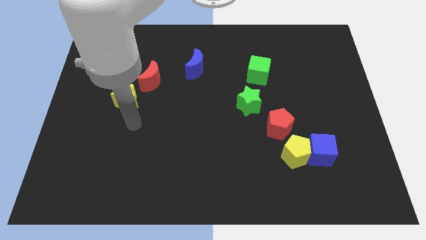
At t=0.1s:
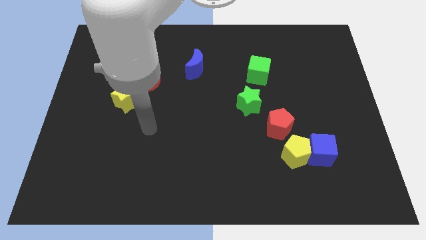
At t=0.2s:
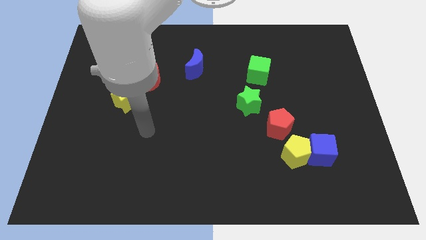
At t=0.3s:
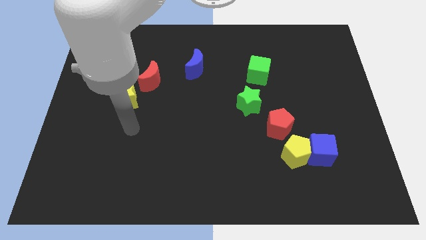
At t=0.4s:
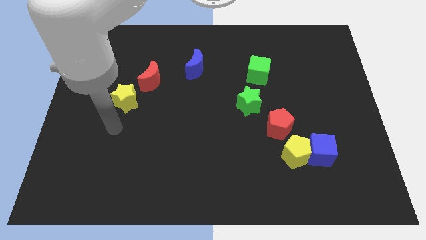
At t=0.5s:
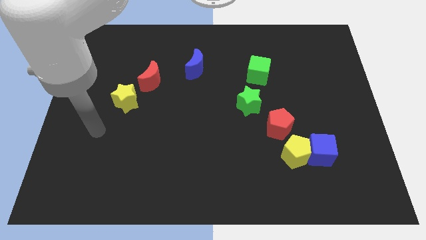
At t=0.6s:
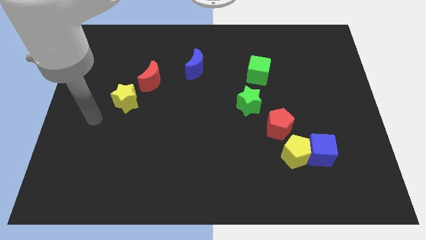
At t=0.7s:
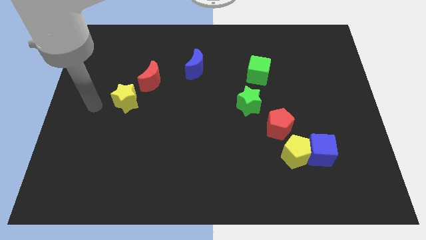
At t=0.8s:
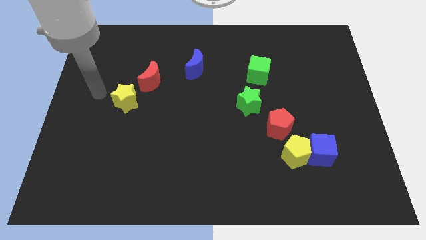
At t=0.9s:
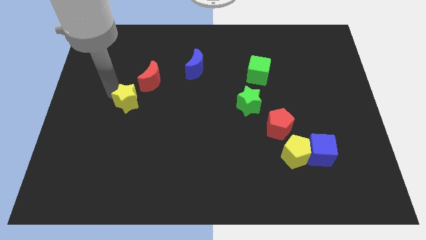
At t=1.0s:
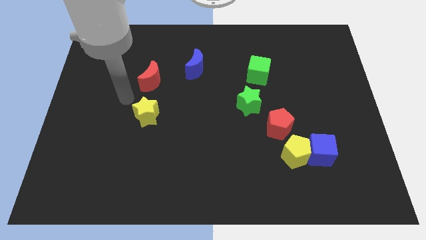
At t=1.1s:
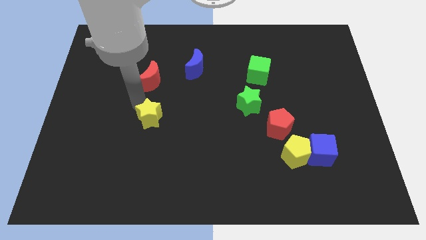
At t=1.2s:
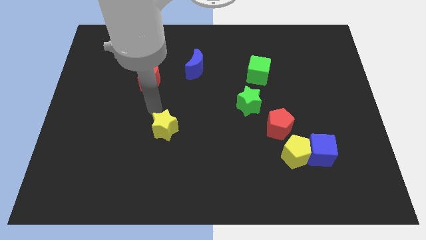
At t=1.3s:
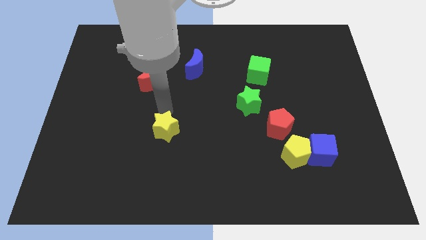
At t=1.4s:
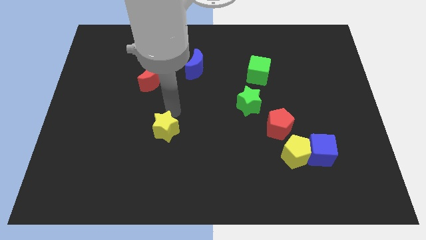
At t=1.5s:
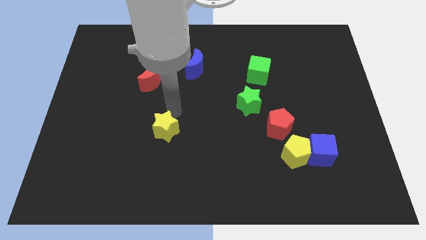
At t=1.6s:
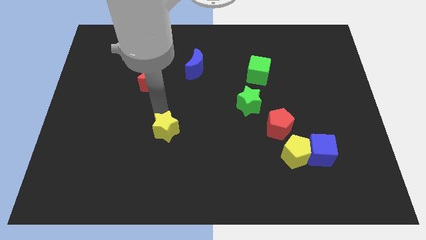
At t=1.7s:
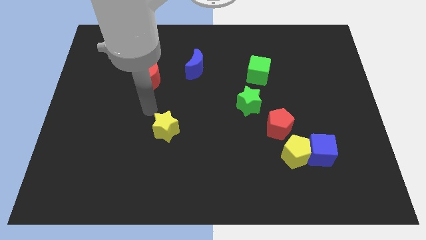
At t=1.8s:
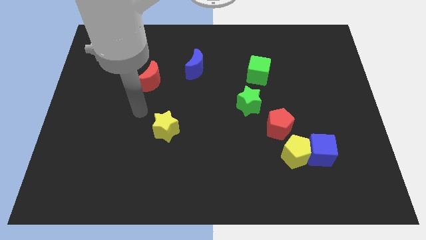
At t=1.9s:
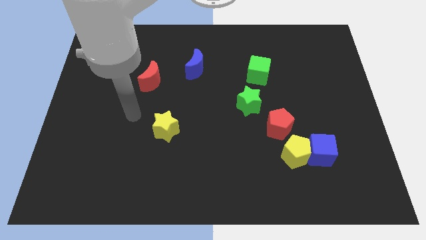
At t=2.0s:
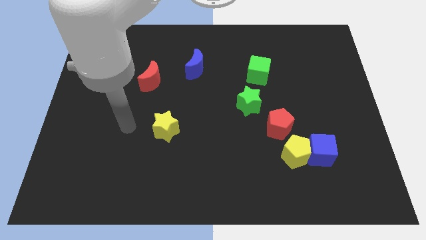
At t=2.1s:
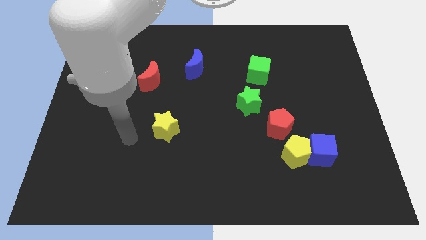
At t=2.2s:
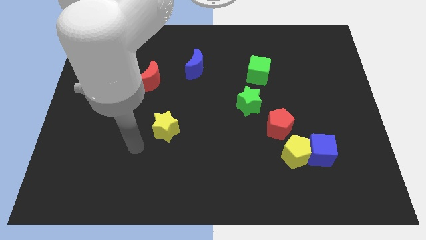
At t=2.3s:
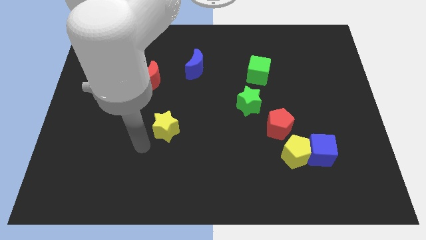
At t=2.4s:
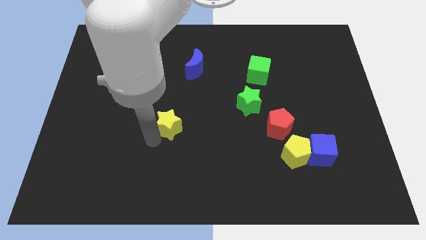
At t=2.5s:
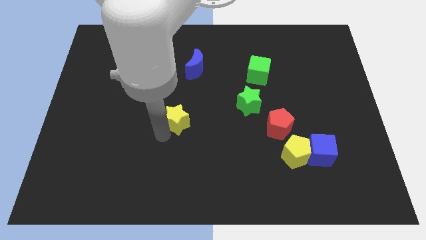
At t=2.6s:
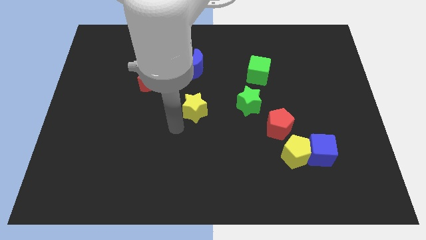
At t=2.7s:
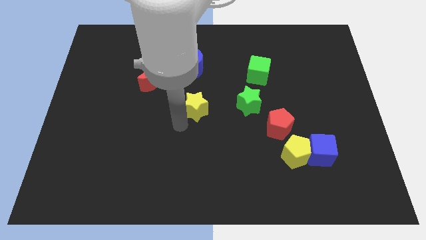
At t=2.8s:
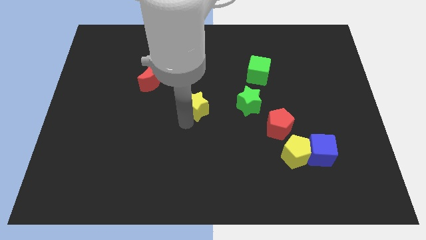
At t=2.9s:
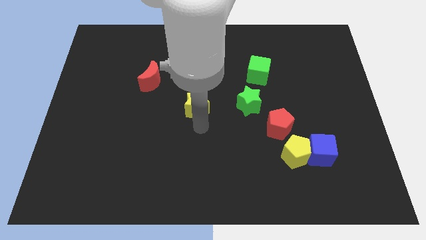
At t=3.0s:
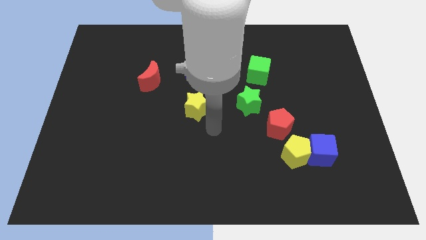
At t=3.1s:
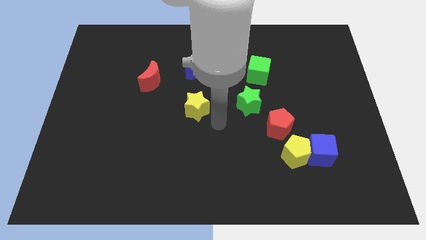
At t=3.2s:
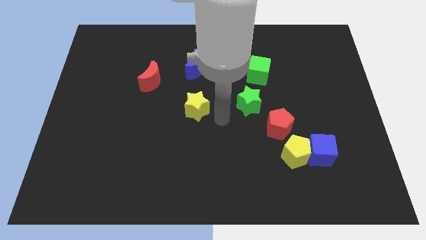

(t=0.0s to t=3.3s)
place the yellow star parallel left to green star

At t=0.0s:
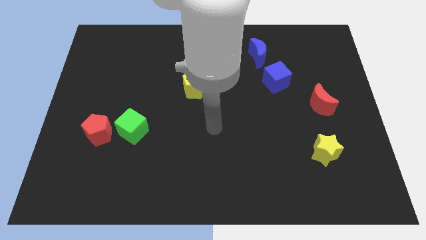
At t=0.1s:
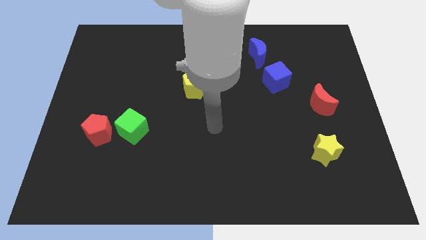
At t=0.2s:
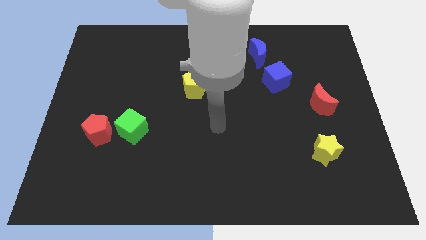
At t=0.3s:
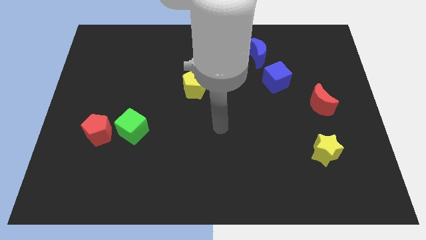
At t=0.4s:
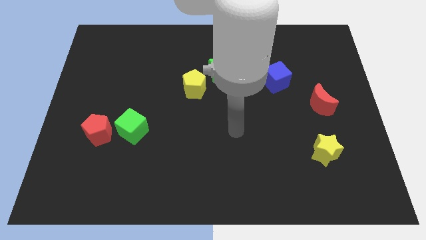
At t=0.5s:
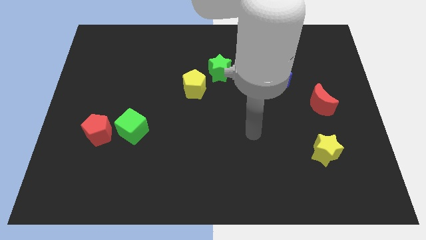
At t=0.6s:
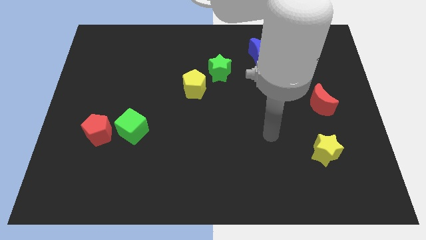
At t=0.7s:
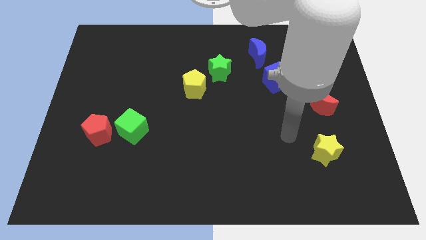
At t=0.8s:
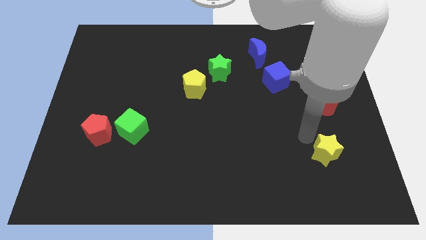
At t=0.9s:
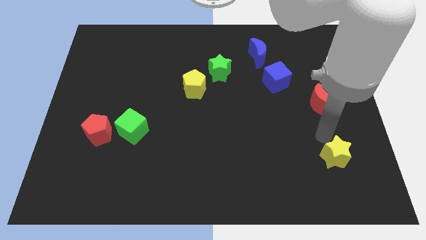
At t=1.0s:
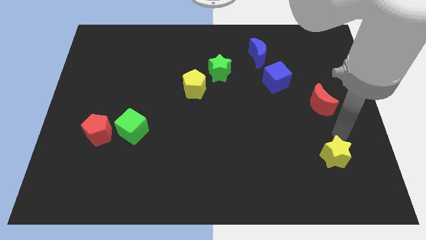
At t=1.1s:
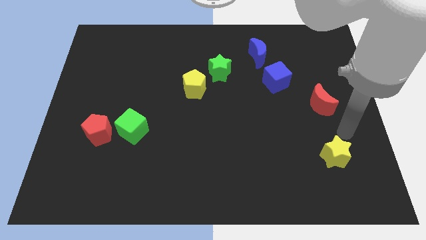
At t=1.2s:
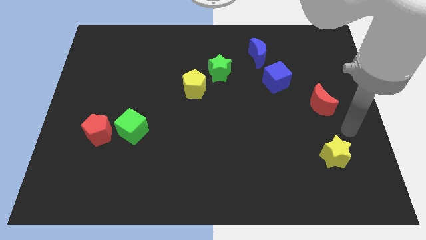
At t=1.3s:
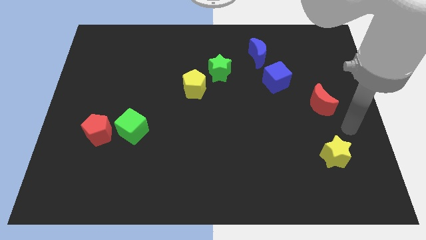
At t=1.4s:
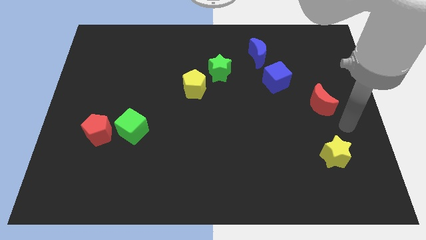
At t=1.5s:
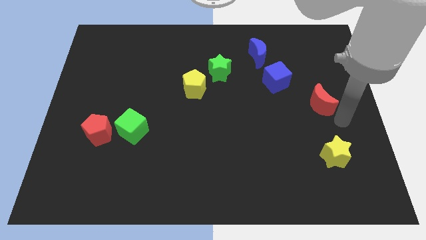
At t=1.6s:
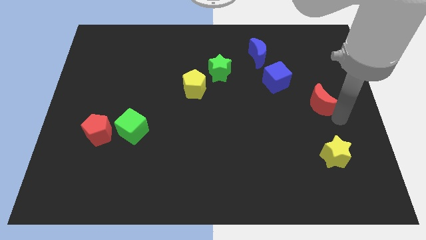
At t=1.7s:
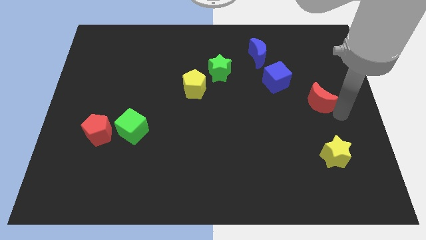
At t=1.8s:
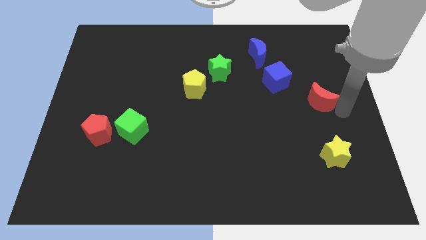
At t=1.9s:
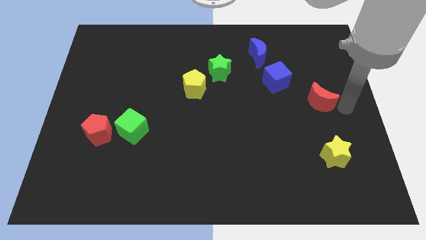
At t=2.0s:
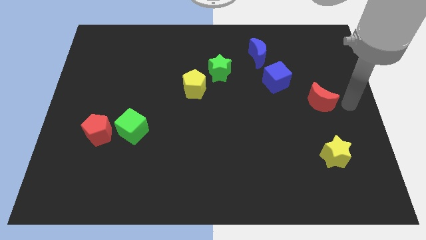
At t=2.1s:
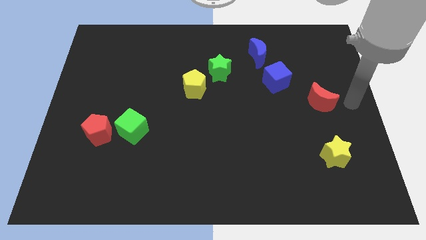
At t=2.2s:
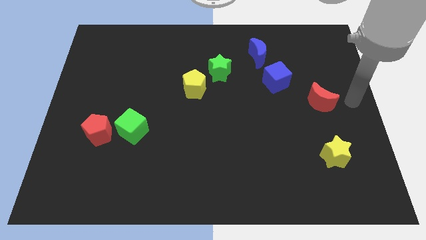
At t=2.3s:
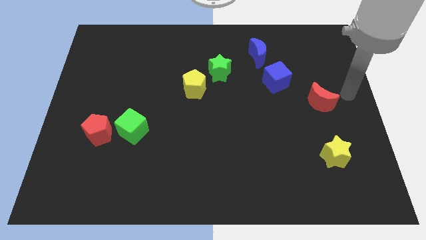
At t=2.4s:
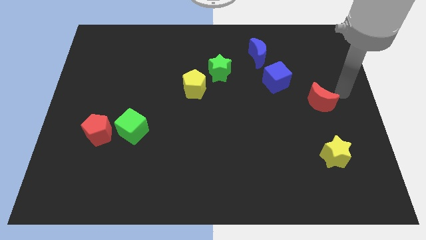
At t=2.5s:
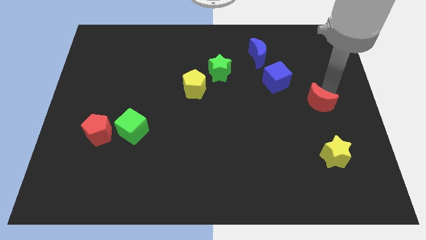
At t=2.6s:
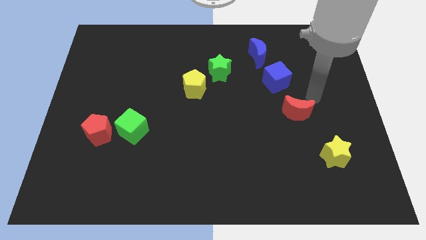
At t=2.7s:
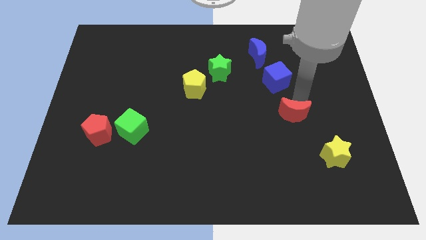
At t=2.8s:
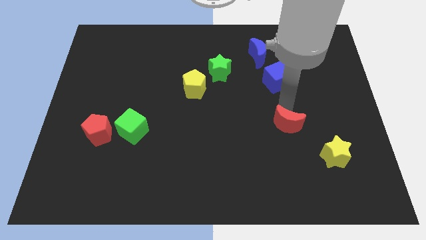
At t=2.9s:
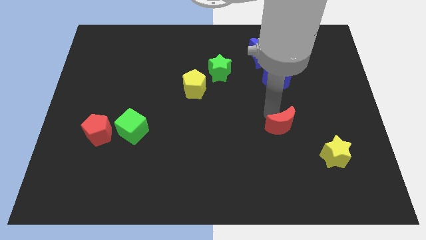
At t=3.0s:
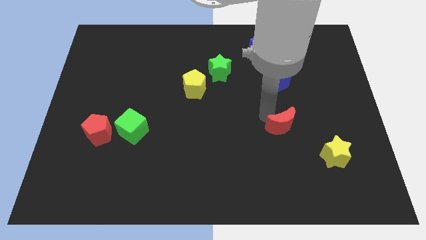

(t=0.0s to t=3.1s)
push the red moon below the blue cube

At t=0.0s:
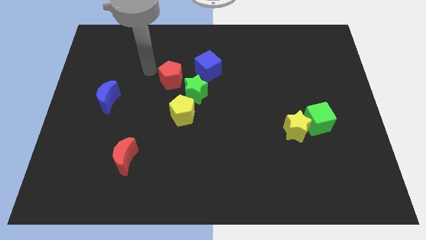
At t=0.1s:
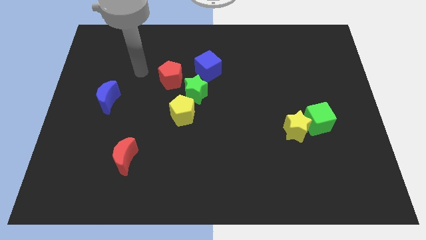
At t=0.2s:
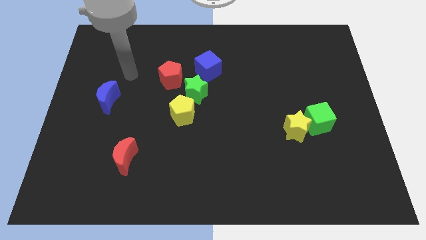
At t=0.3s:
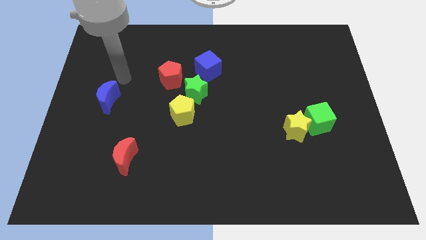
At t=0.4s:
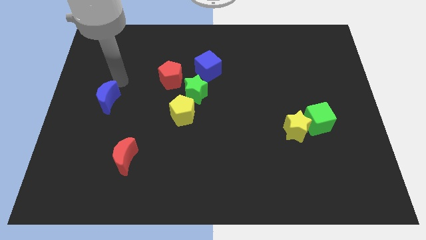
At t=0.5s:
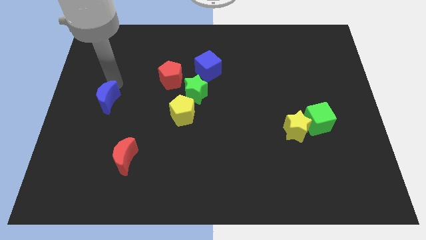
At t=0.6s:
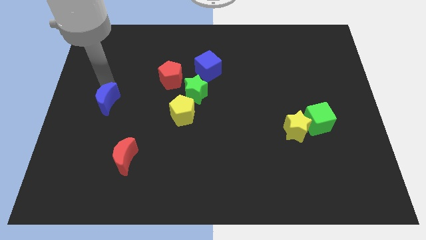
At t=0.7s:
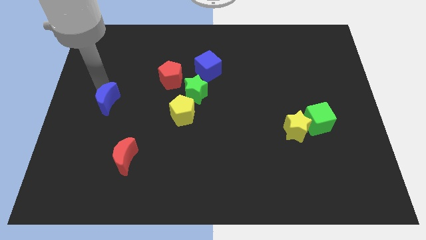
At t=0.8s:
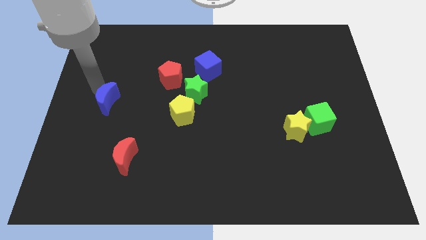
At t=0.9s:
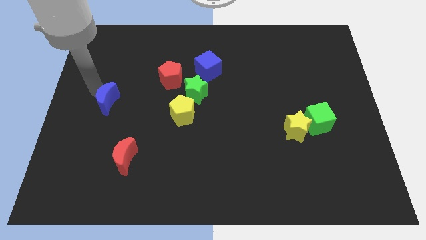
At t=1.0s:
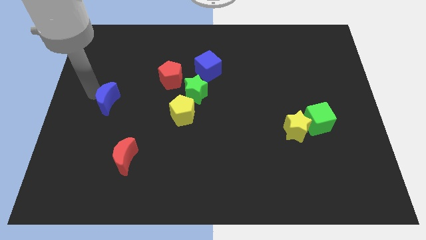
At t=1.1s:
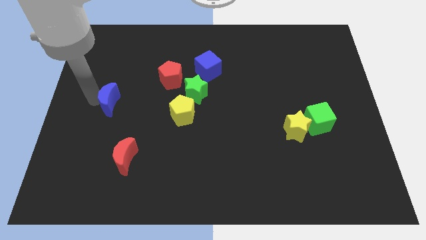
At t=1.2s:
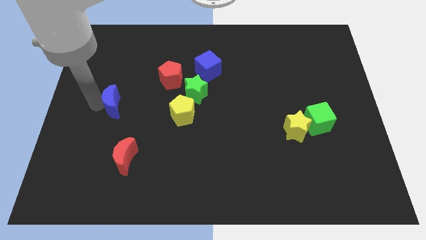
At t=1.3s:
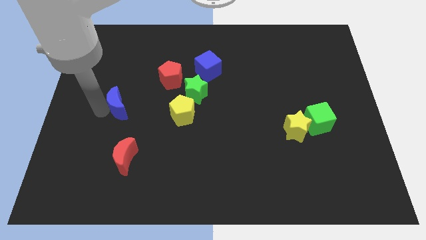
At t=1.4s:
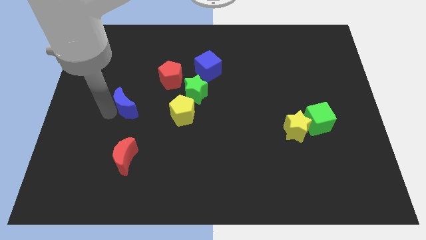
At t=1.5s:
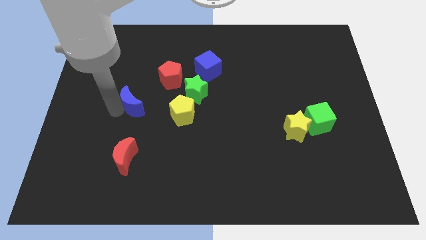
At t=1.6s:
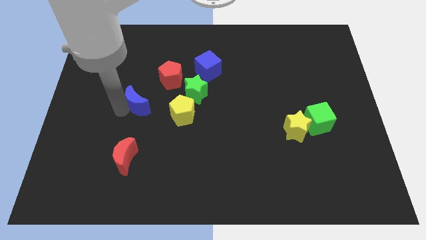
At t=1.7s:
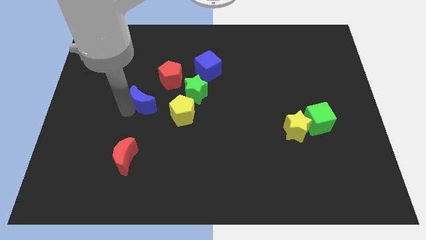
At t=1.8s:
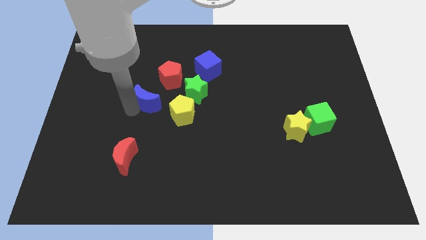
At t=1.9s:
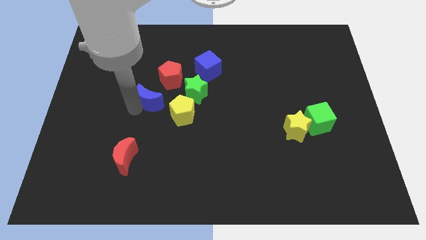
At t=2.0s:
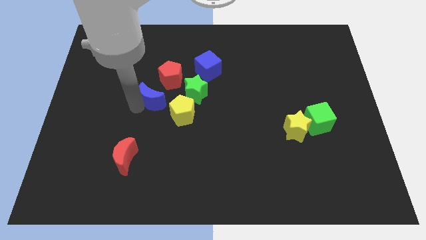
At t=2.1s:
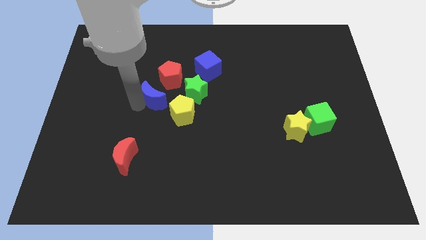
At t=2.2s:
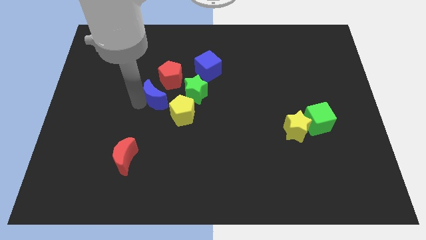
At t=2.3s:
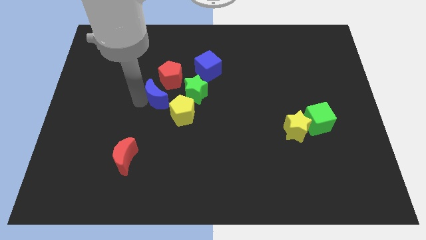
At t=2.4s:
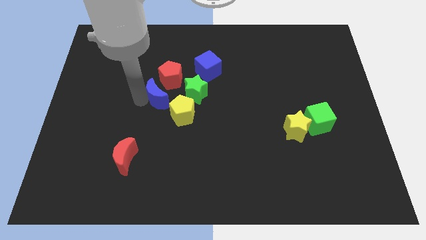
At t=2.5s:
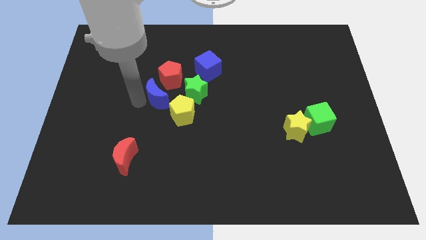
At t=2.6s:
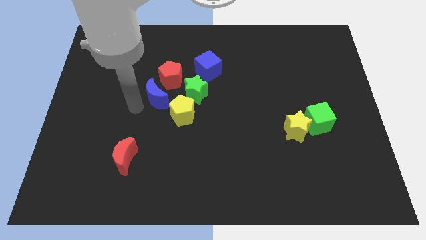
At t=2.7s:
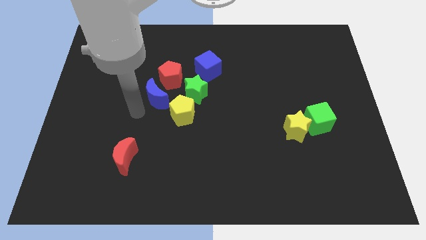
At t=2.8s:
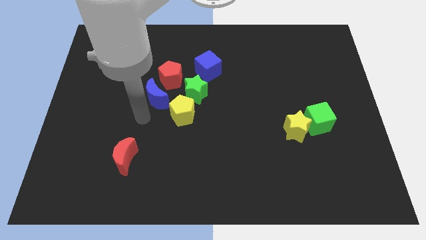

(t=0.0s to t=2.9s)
push the blue moon at the top left side of the yellow pentagon
